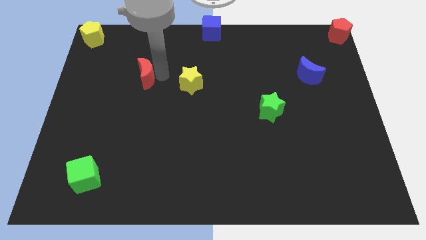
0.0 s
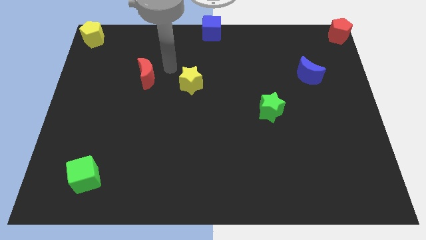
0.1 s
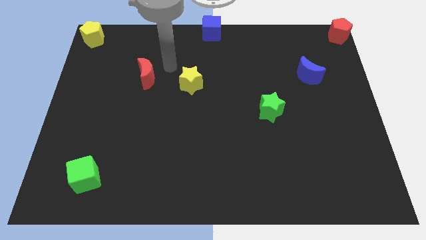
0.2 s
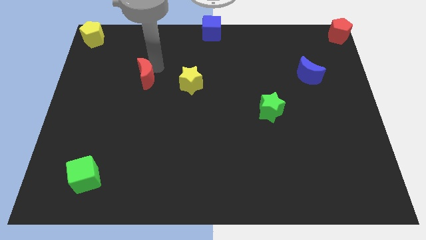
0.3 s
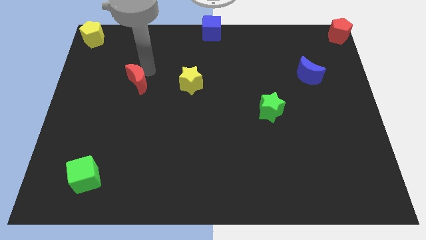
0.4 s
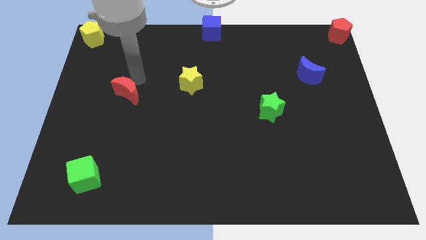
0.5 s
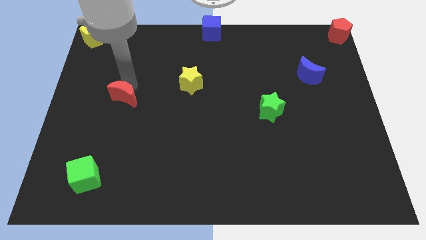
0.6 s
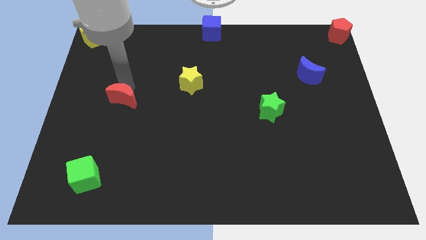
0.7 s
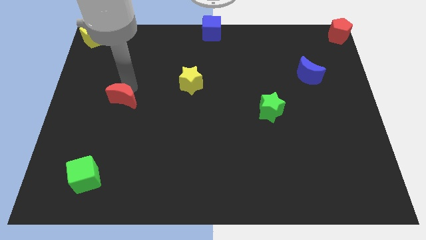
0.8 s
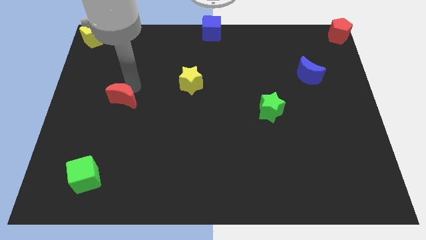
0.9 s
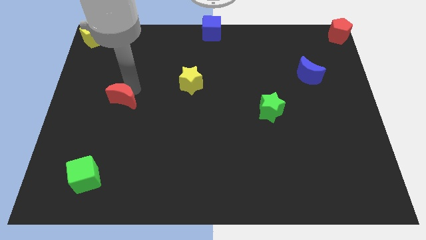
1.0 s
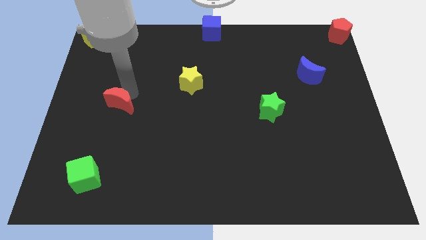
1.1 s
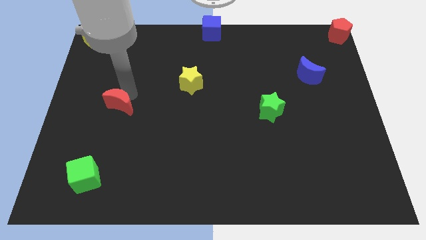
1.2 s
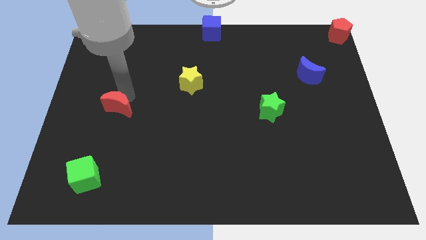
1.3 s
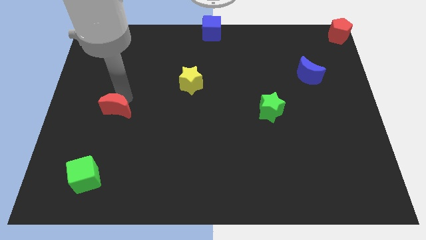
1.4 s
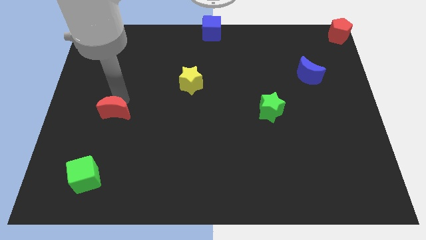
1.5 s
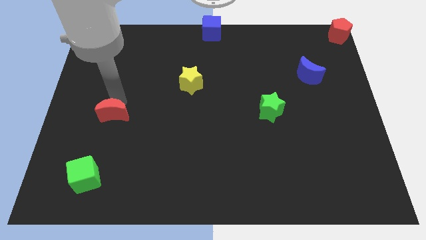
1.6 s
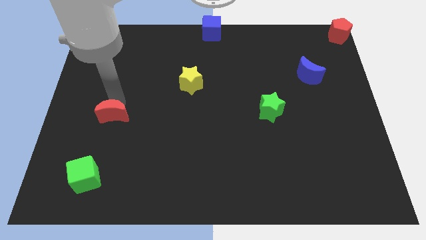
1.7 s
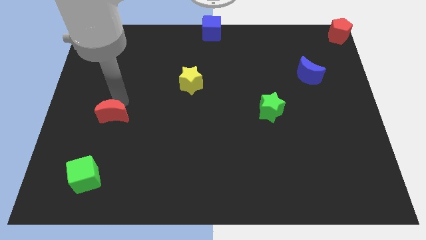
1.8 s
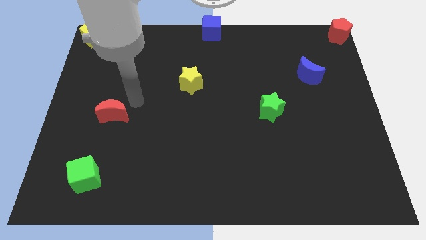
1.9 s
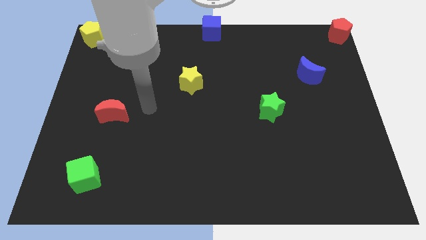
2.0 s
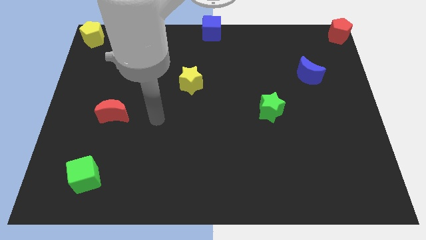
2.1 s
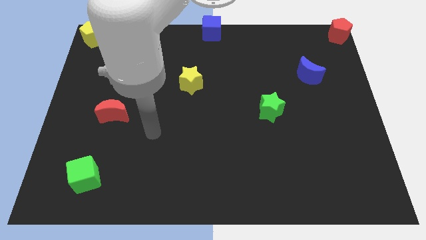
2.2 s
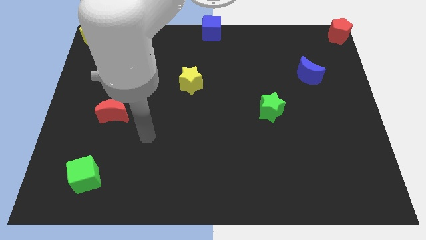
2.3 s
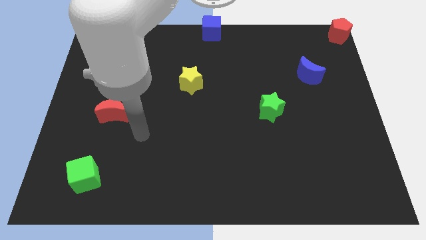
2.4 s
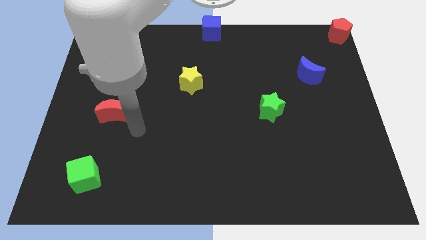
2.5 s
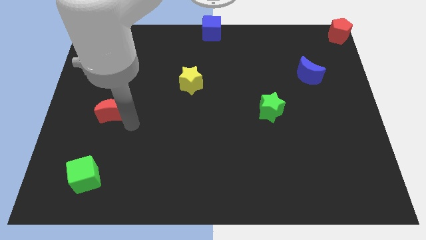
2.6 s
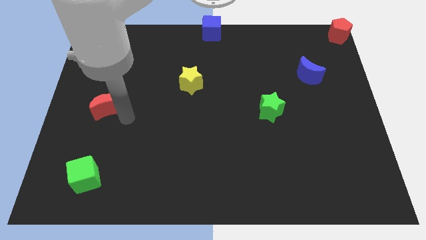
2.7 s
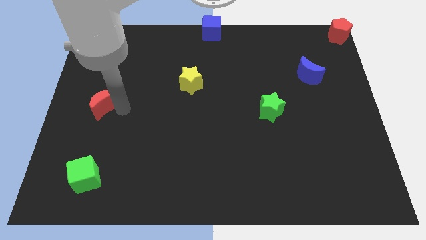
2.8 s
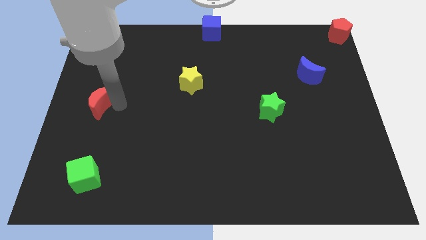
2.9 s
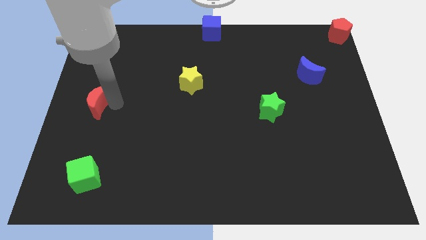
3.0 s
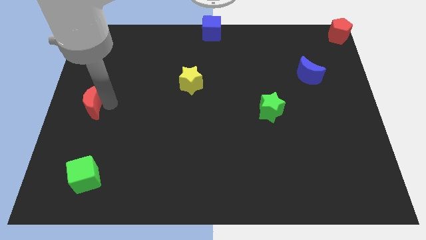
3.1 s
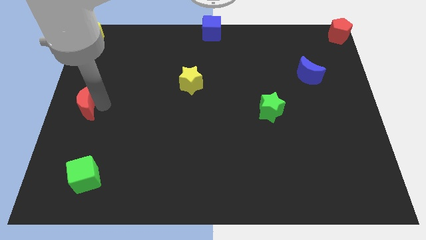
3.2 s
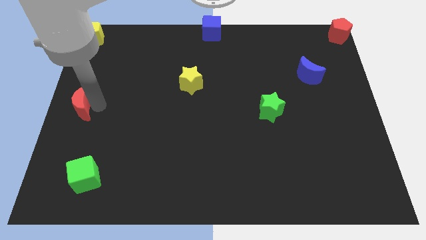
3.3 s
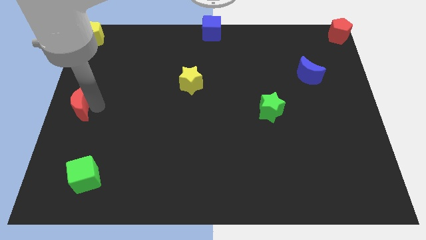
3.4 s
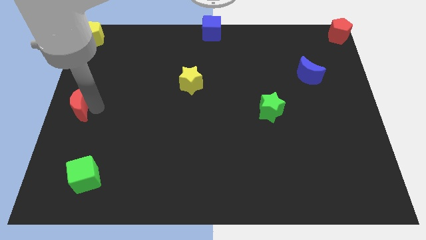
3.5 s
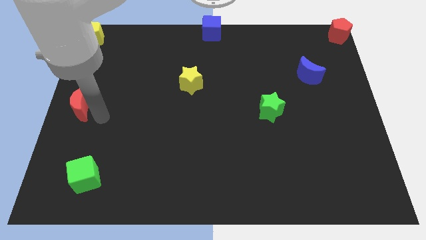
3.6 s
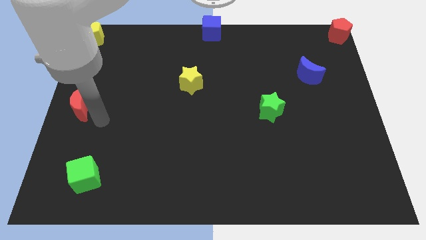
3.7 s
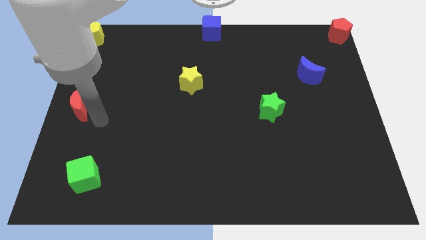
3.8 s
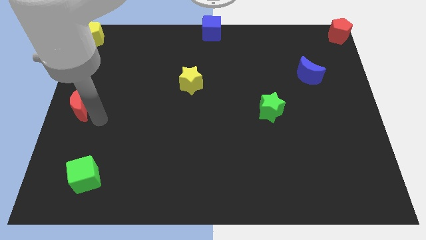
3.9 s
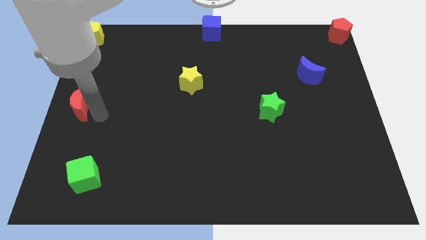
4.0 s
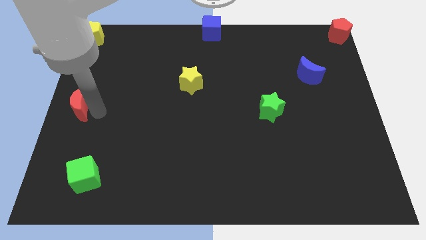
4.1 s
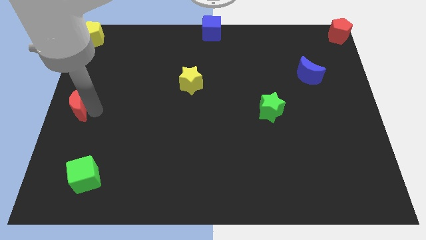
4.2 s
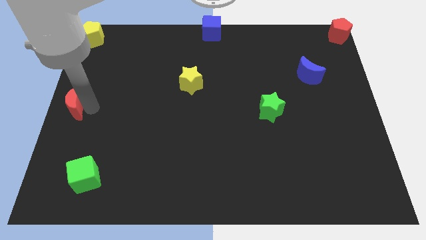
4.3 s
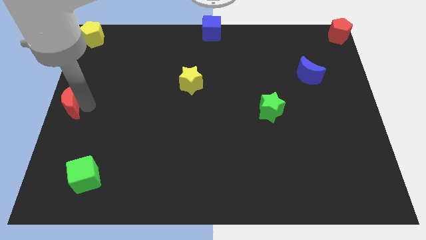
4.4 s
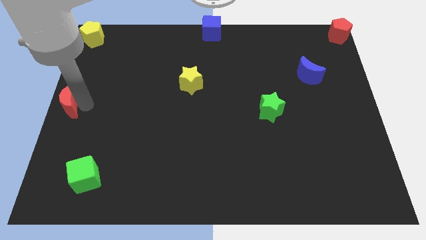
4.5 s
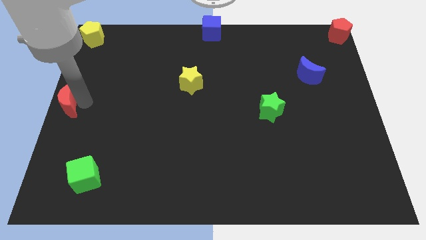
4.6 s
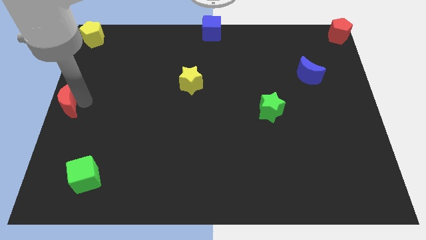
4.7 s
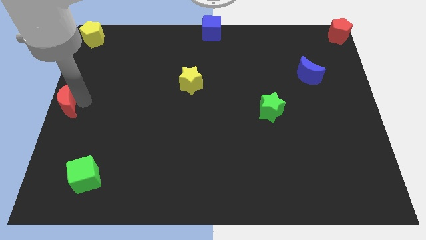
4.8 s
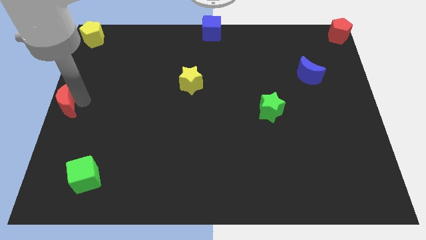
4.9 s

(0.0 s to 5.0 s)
push the red crescent to the left center of the board

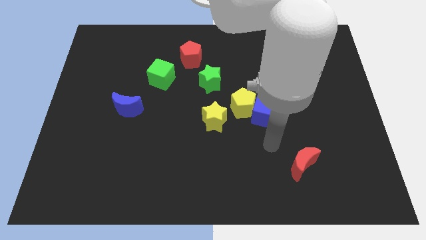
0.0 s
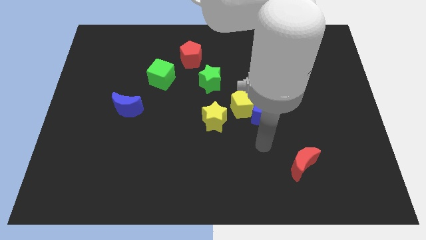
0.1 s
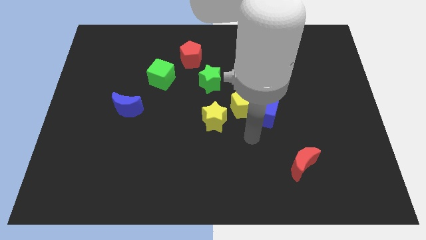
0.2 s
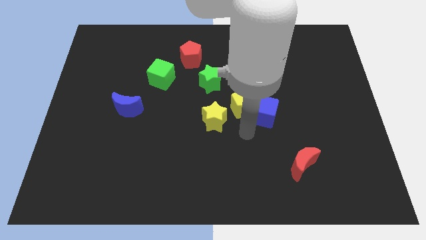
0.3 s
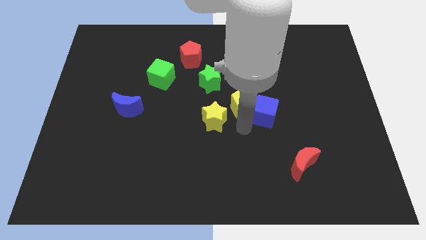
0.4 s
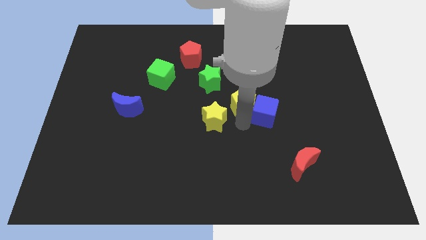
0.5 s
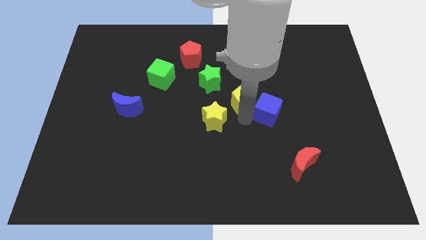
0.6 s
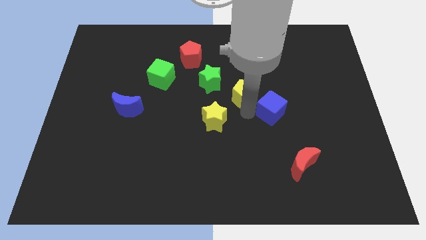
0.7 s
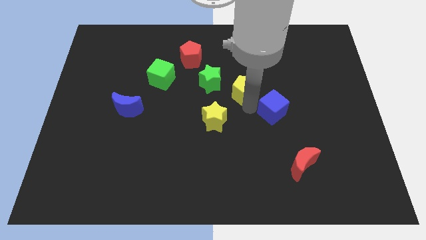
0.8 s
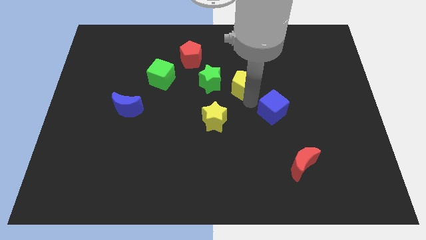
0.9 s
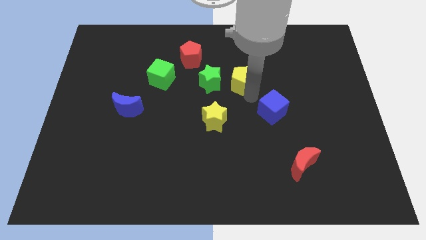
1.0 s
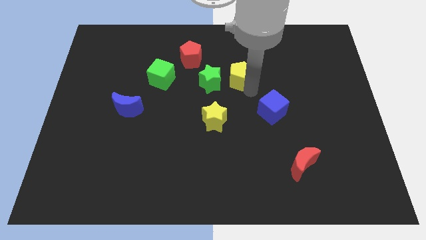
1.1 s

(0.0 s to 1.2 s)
separate the yellow pentagon from blue cube

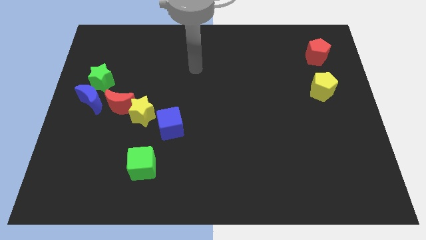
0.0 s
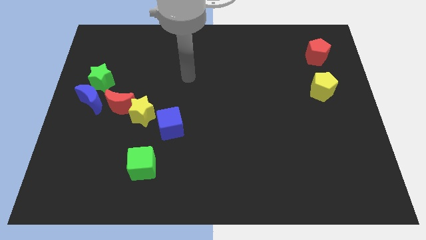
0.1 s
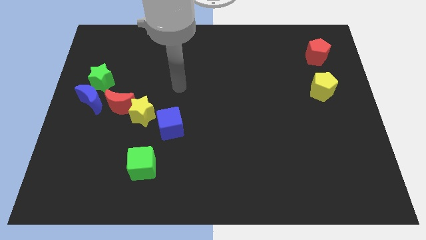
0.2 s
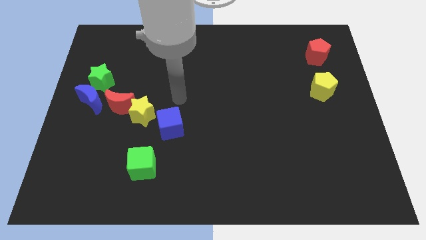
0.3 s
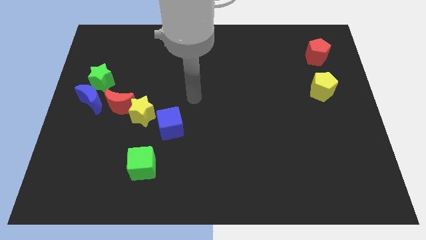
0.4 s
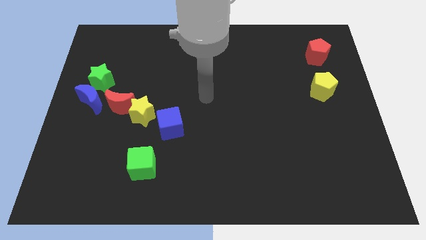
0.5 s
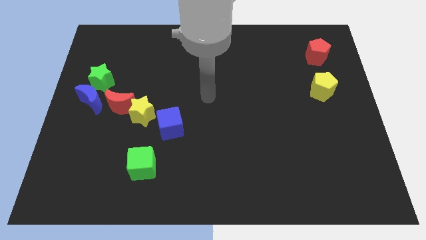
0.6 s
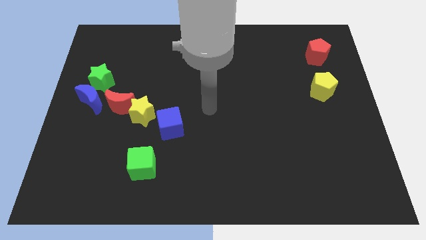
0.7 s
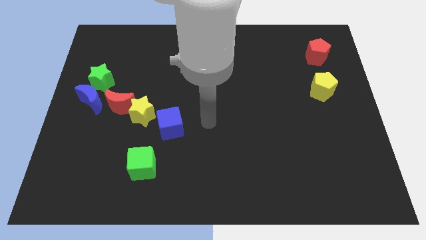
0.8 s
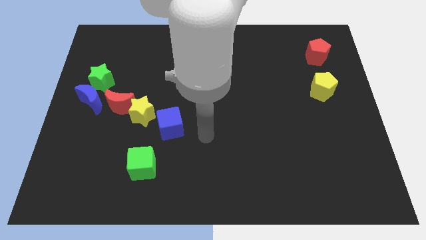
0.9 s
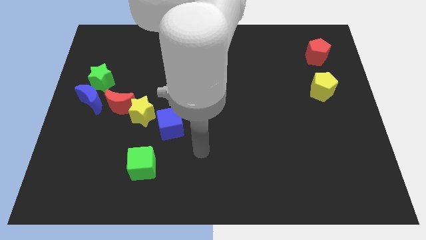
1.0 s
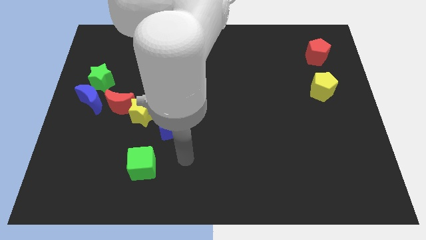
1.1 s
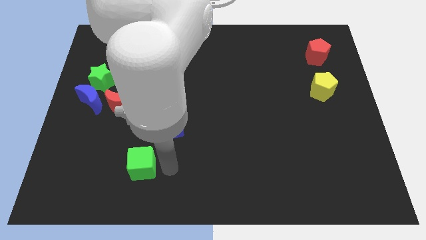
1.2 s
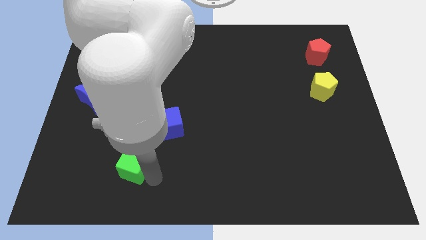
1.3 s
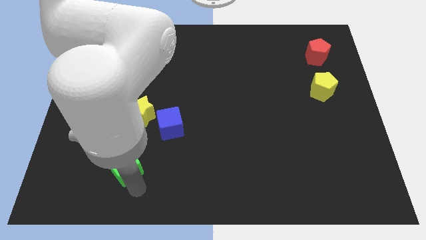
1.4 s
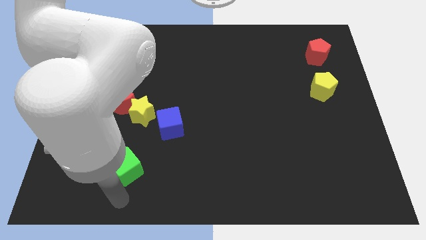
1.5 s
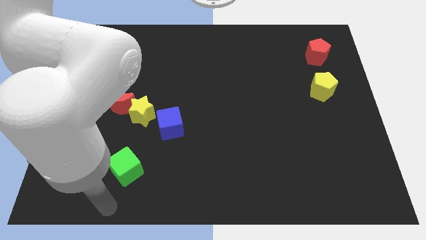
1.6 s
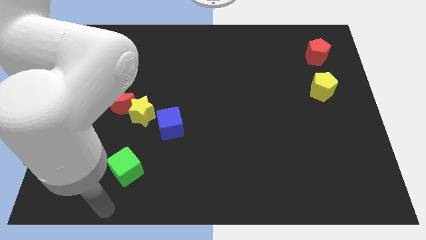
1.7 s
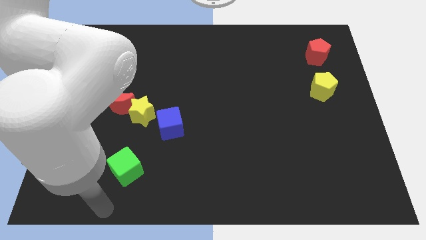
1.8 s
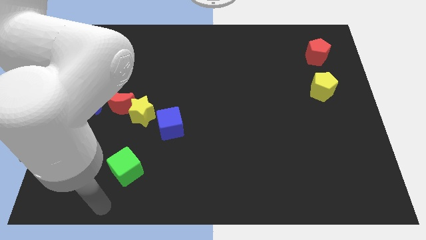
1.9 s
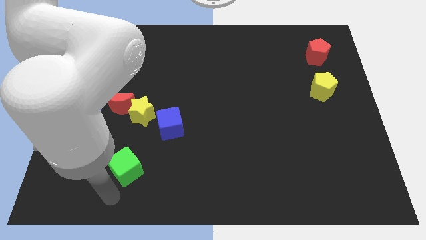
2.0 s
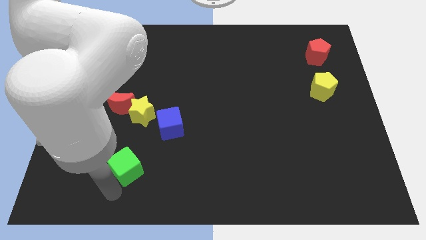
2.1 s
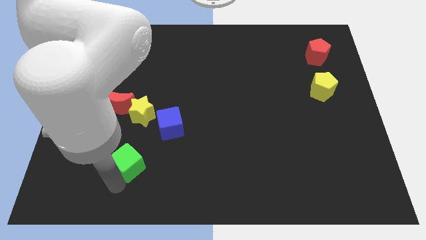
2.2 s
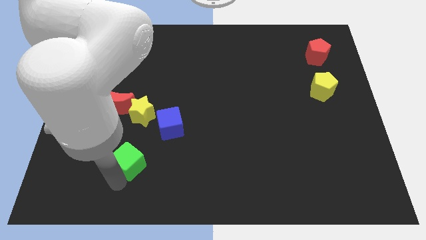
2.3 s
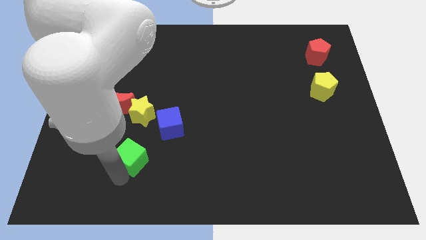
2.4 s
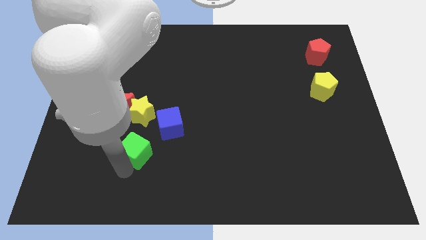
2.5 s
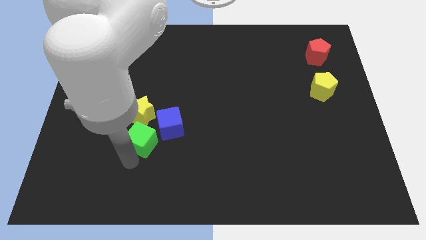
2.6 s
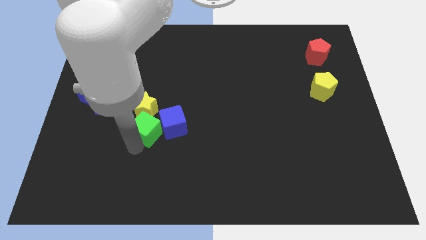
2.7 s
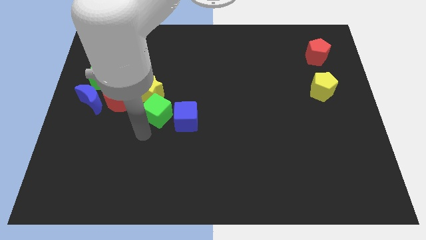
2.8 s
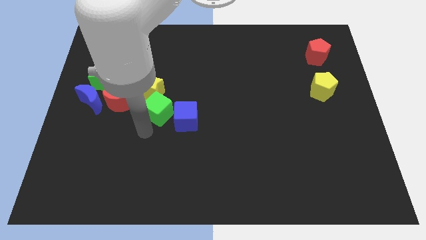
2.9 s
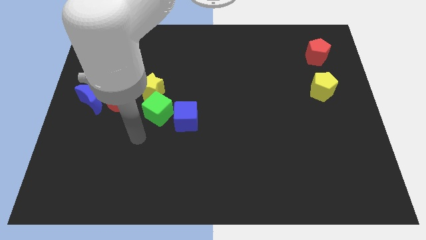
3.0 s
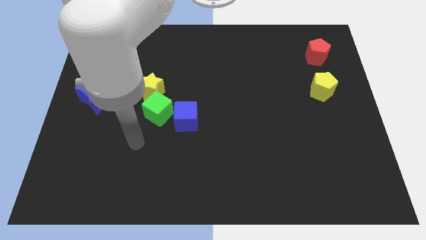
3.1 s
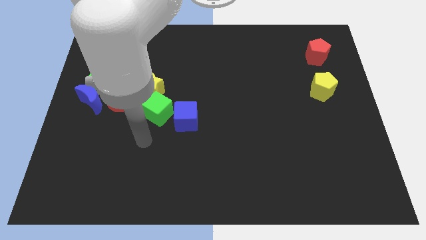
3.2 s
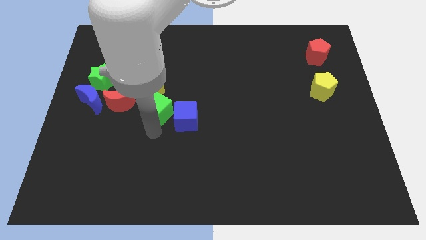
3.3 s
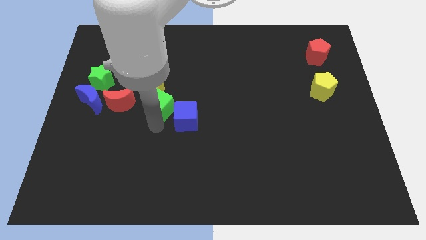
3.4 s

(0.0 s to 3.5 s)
place green cube to the left blue cube
